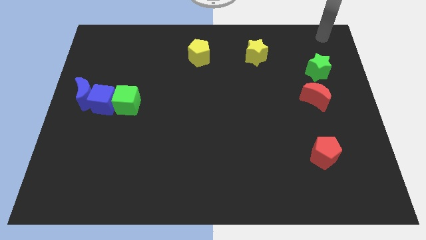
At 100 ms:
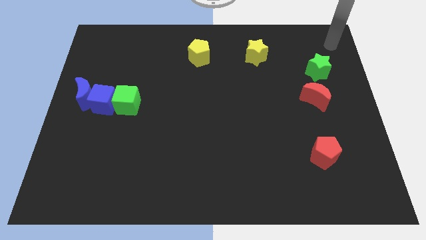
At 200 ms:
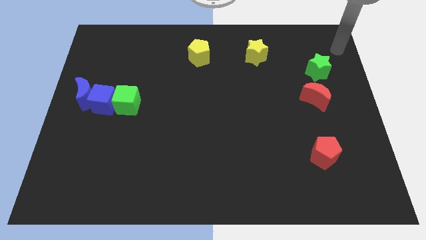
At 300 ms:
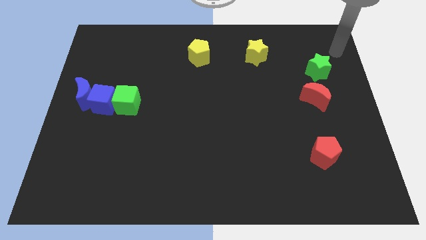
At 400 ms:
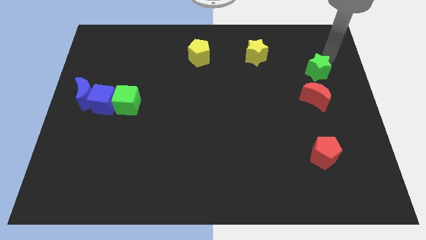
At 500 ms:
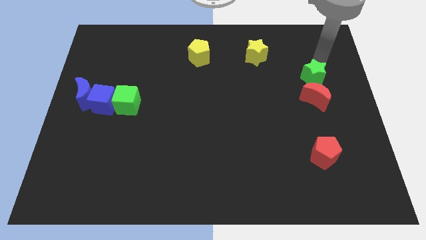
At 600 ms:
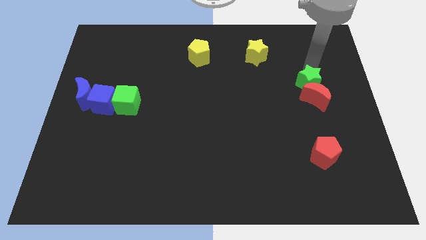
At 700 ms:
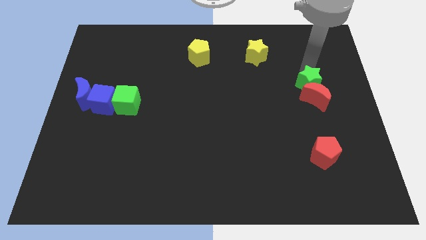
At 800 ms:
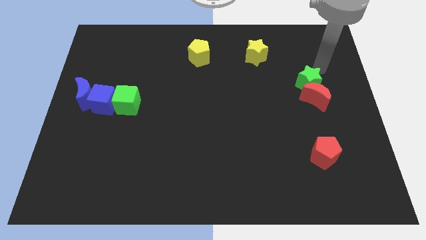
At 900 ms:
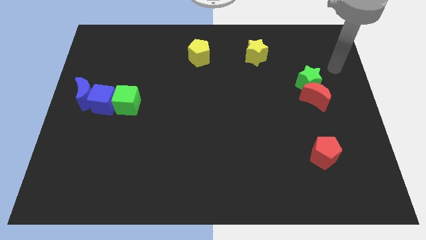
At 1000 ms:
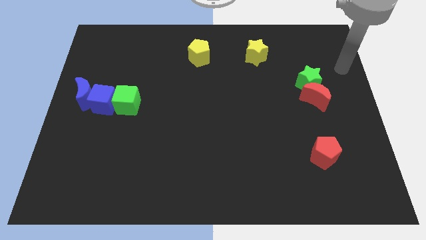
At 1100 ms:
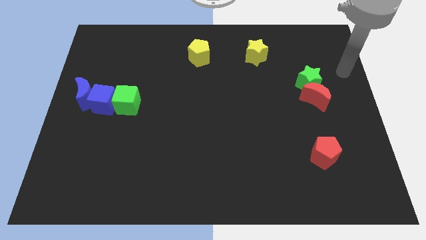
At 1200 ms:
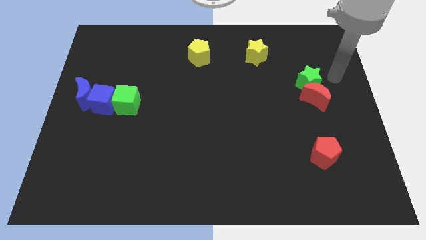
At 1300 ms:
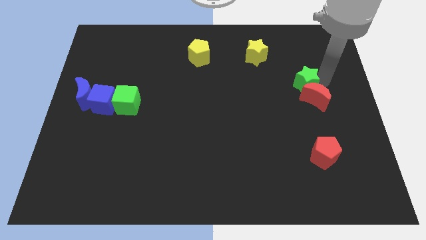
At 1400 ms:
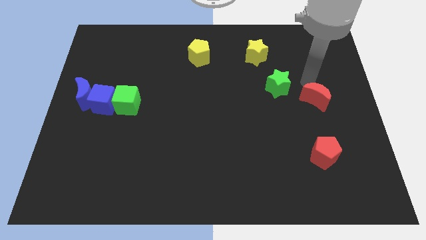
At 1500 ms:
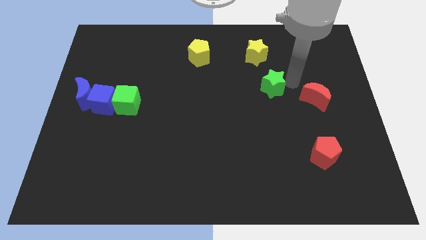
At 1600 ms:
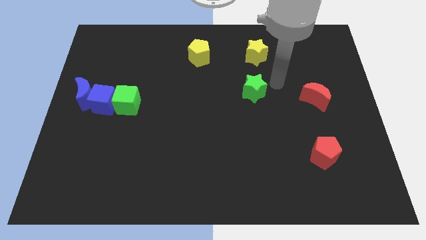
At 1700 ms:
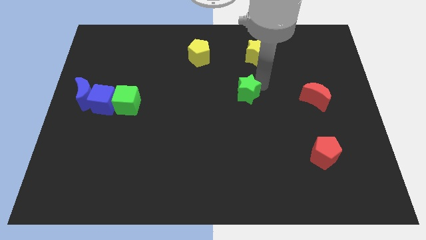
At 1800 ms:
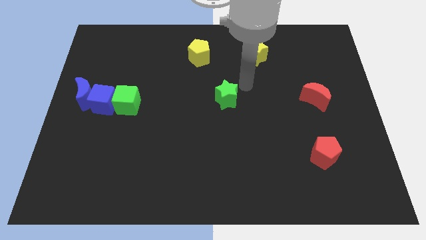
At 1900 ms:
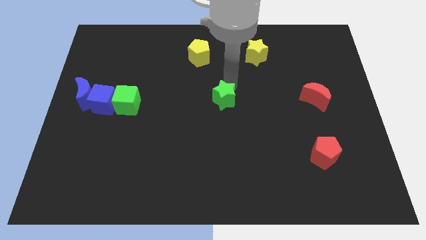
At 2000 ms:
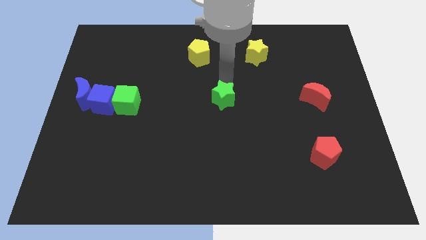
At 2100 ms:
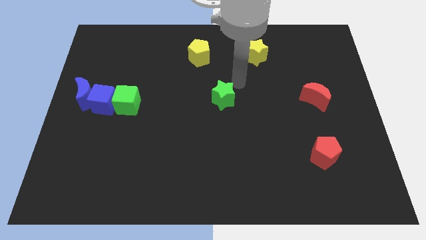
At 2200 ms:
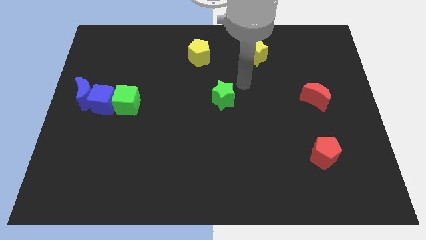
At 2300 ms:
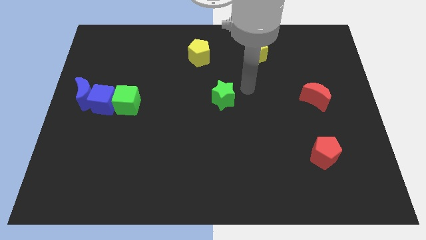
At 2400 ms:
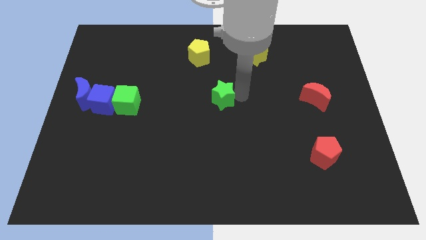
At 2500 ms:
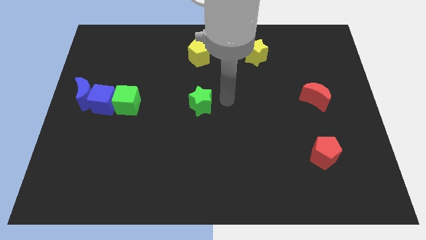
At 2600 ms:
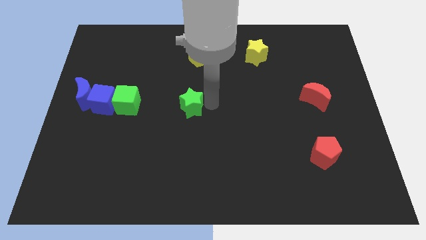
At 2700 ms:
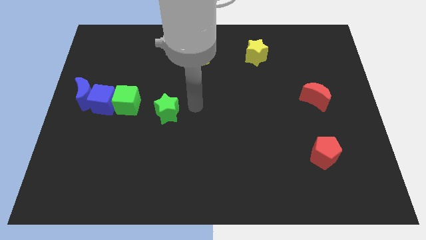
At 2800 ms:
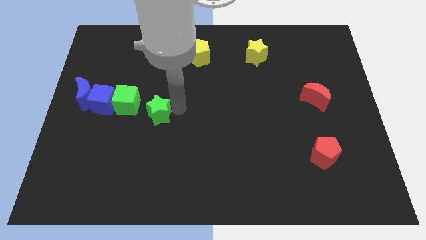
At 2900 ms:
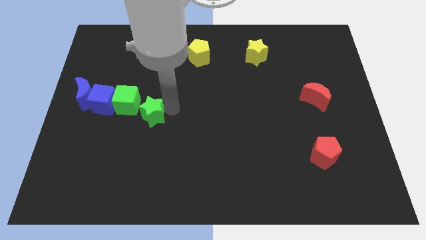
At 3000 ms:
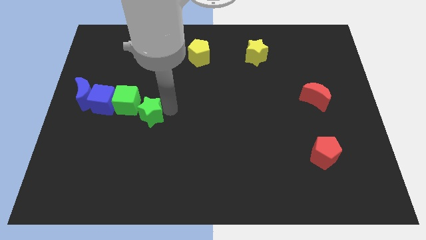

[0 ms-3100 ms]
push green star towards green cube

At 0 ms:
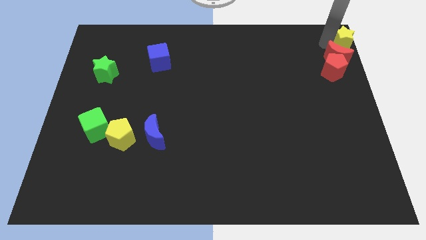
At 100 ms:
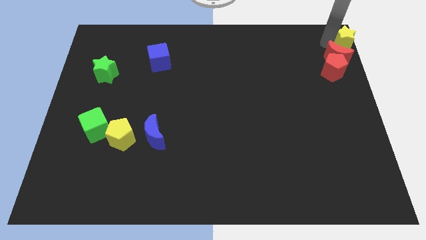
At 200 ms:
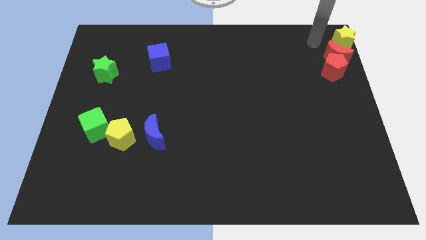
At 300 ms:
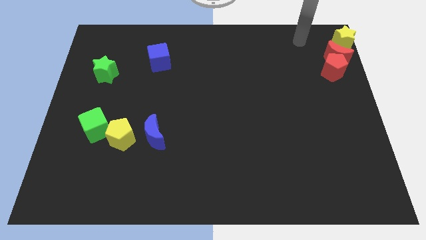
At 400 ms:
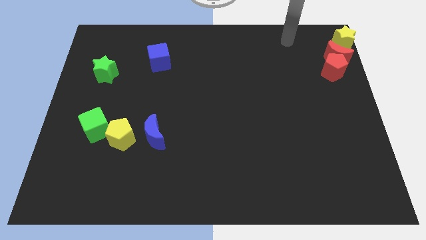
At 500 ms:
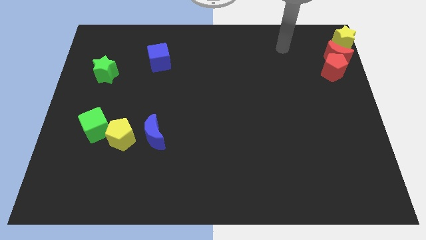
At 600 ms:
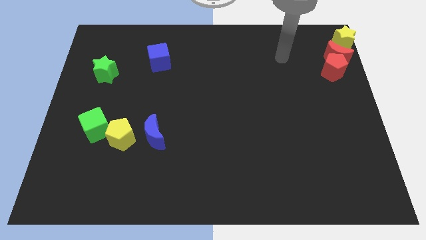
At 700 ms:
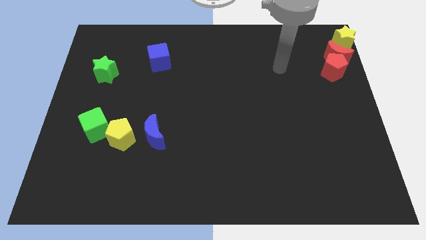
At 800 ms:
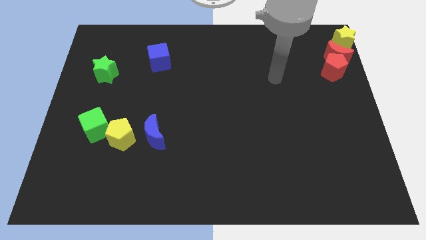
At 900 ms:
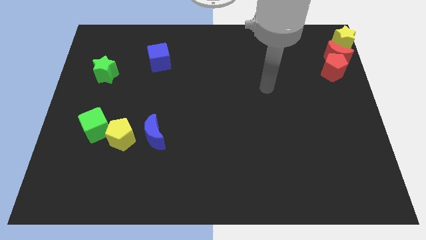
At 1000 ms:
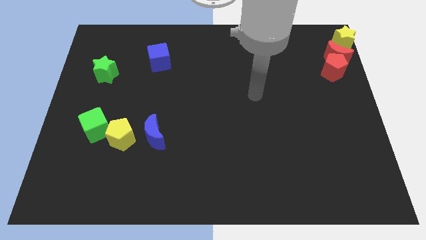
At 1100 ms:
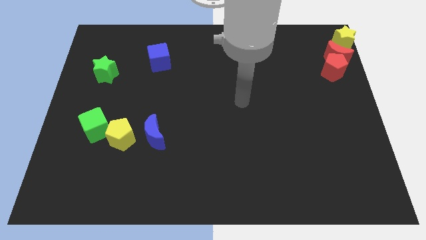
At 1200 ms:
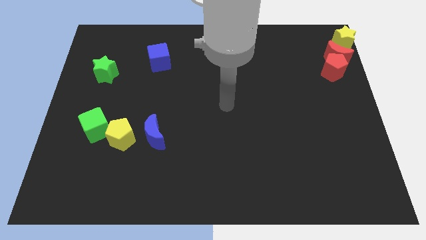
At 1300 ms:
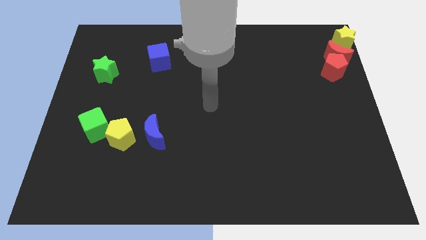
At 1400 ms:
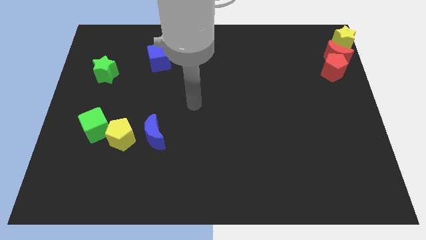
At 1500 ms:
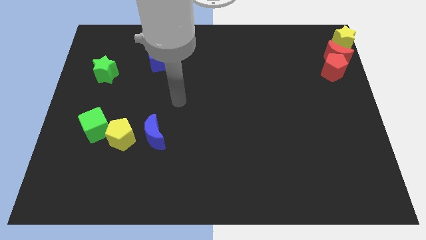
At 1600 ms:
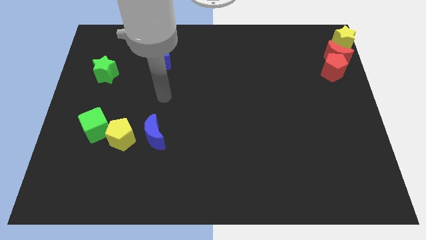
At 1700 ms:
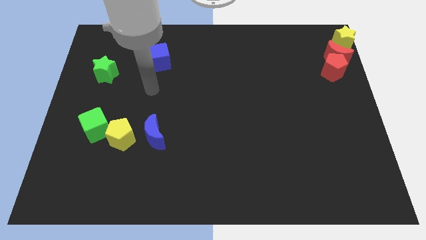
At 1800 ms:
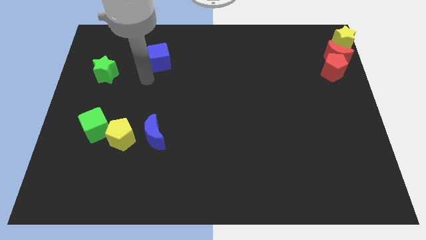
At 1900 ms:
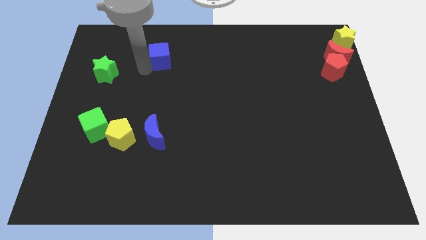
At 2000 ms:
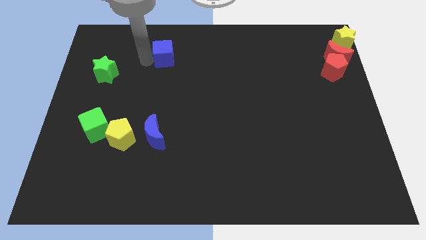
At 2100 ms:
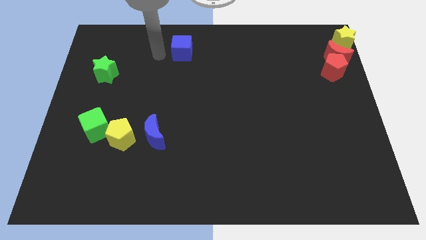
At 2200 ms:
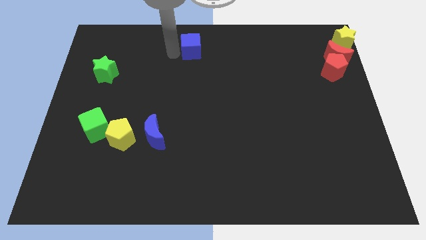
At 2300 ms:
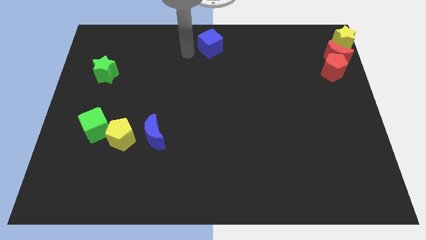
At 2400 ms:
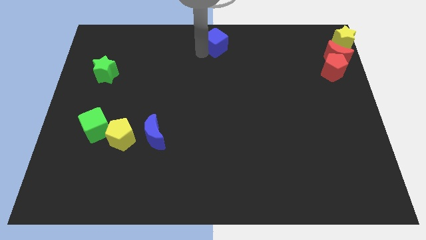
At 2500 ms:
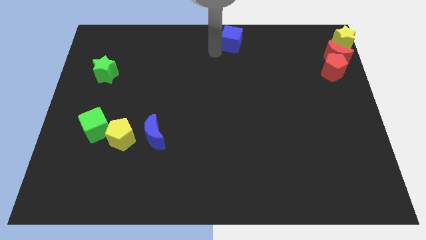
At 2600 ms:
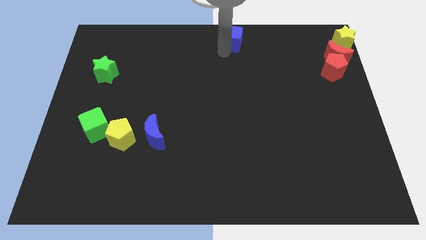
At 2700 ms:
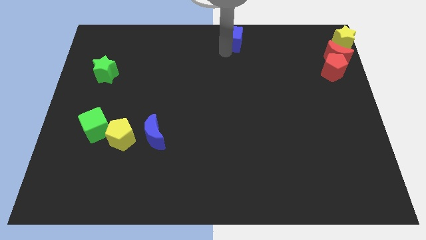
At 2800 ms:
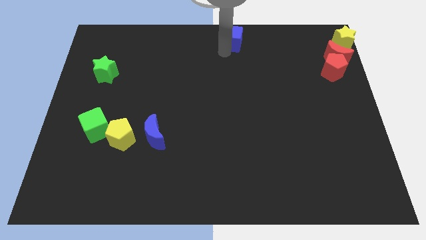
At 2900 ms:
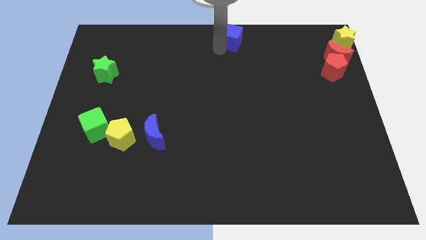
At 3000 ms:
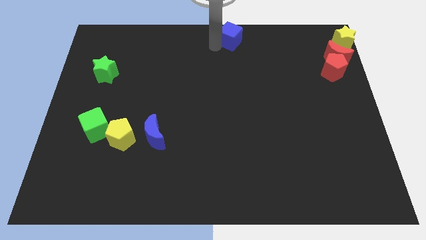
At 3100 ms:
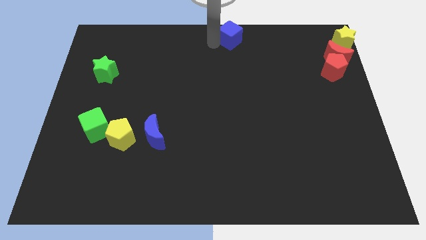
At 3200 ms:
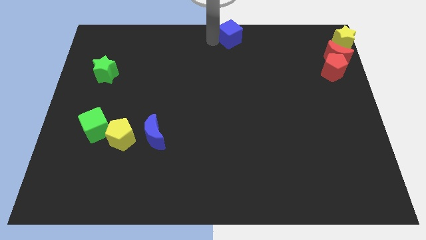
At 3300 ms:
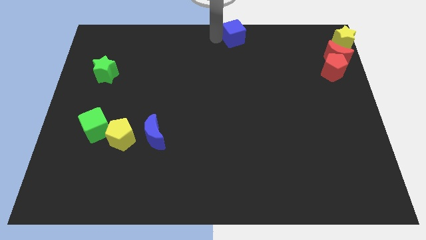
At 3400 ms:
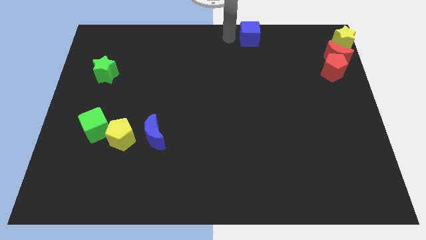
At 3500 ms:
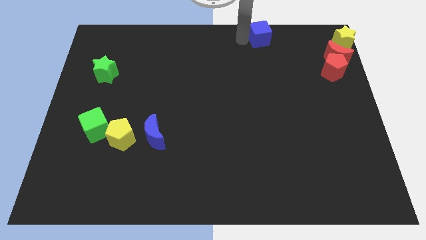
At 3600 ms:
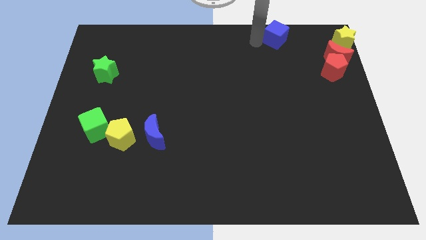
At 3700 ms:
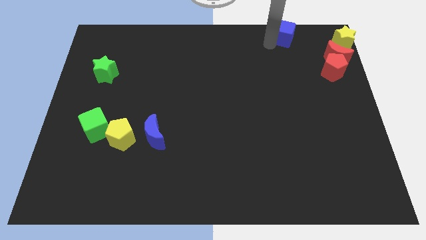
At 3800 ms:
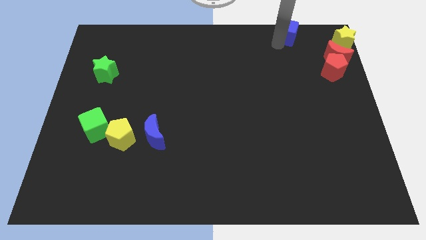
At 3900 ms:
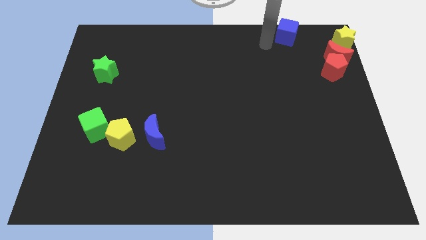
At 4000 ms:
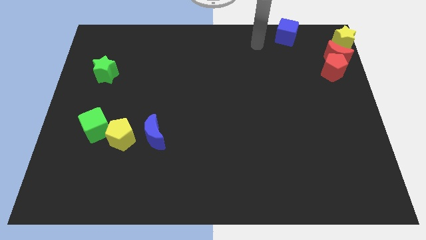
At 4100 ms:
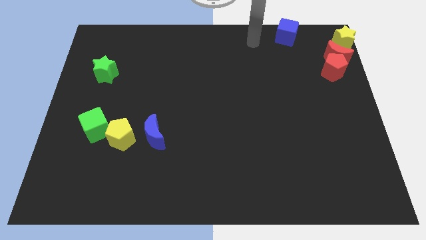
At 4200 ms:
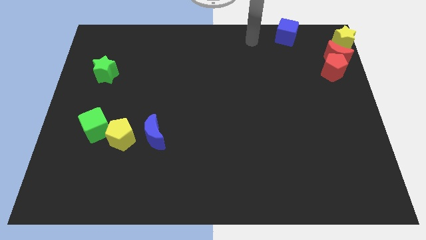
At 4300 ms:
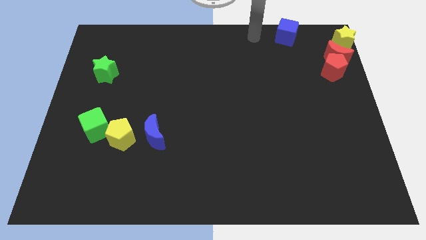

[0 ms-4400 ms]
place blue cube to the left of yellow star

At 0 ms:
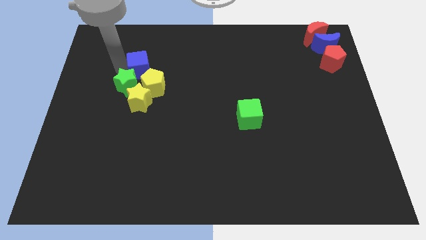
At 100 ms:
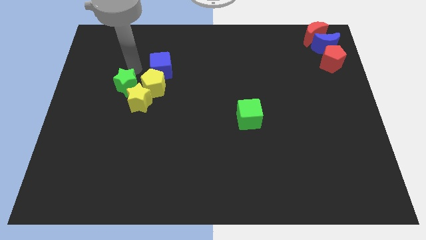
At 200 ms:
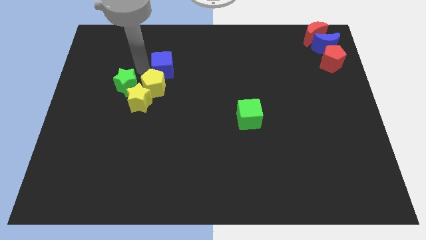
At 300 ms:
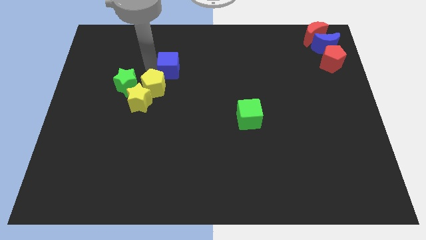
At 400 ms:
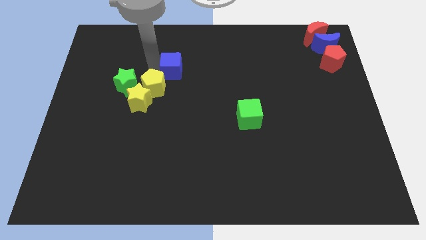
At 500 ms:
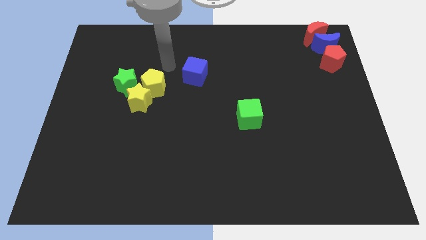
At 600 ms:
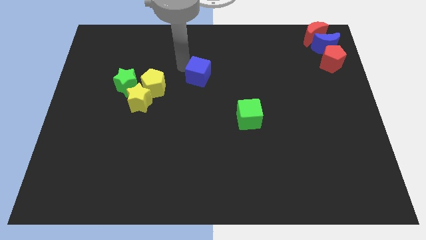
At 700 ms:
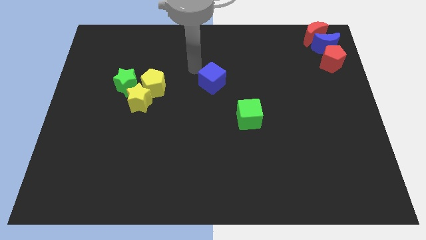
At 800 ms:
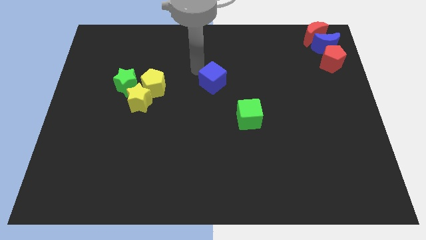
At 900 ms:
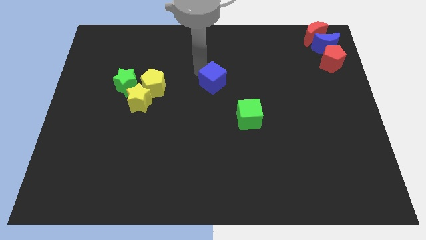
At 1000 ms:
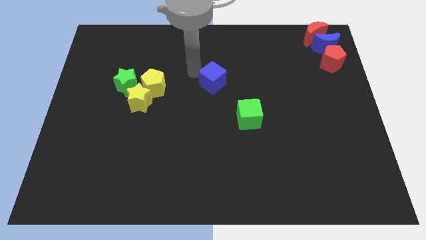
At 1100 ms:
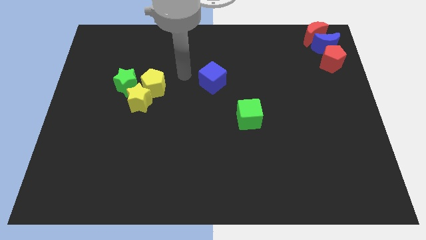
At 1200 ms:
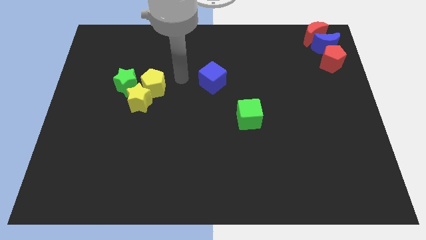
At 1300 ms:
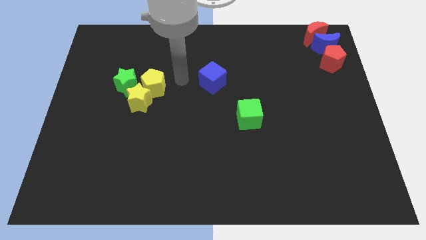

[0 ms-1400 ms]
place the blue square at the center of the board
